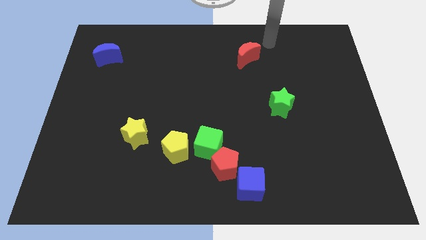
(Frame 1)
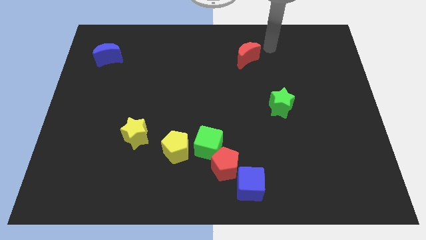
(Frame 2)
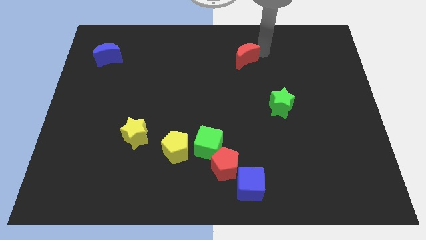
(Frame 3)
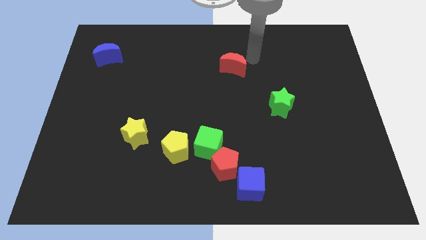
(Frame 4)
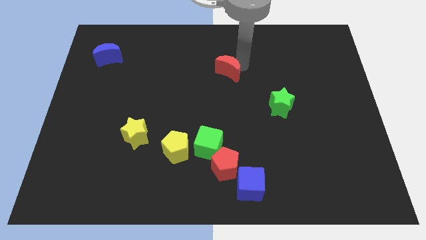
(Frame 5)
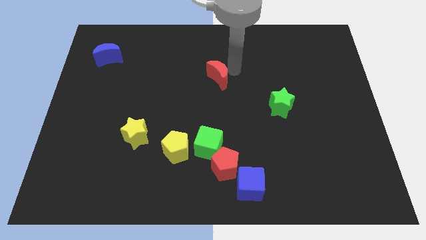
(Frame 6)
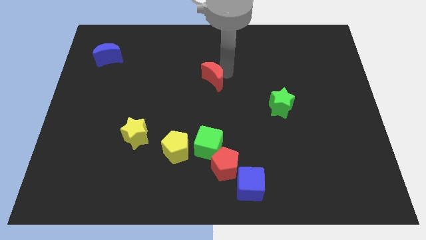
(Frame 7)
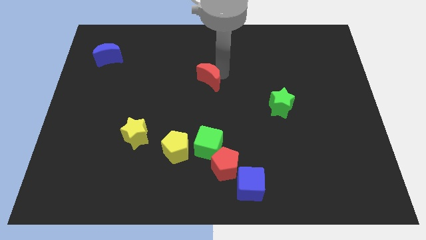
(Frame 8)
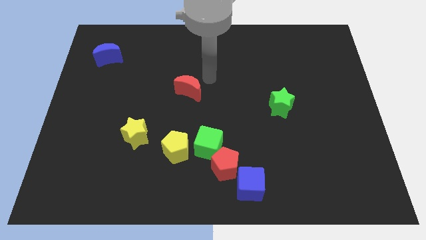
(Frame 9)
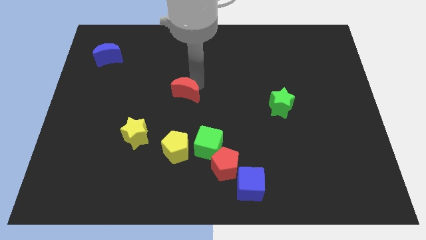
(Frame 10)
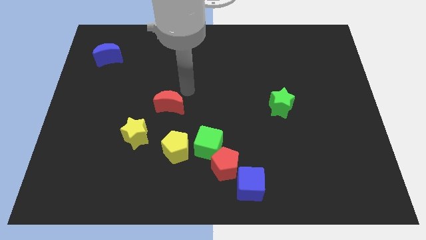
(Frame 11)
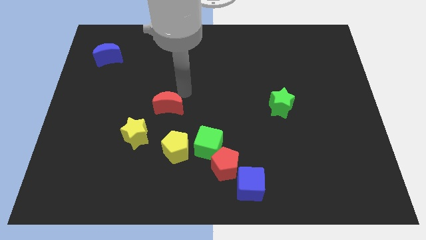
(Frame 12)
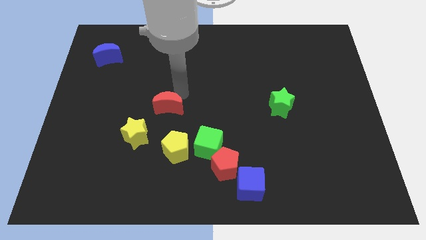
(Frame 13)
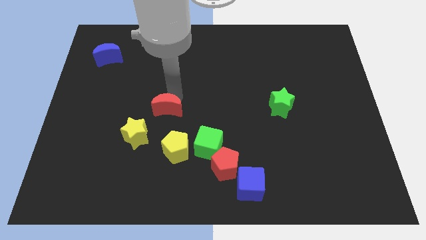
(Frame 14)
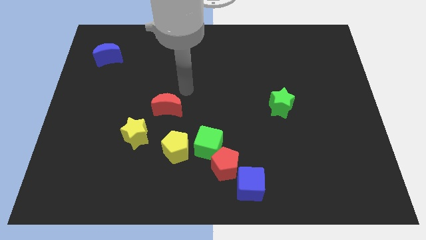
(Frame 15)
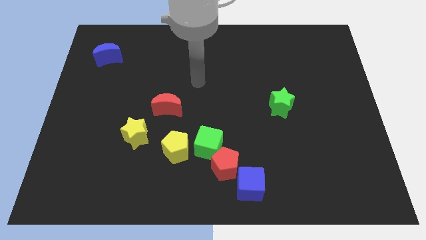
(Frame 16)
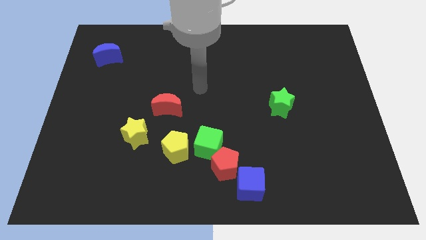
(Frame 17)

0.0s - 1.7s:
push the red crescent diagonal to the left of the green star

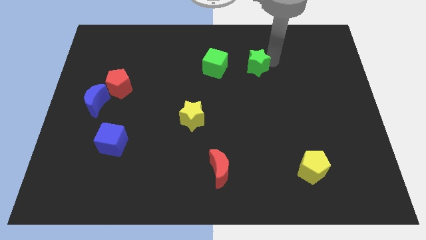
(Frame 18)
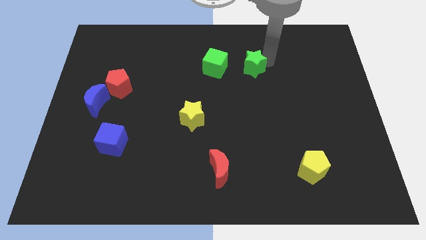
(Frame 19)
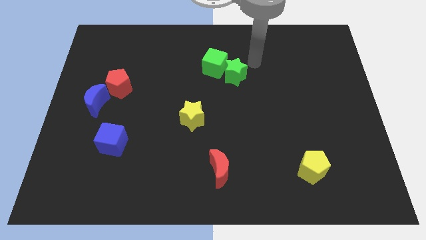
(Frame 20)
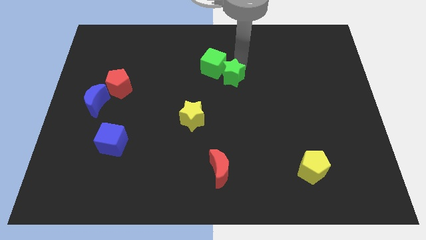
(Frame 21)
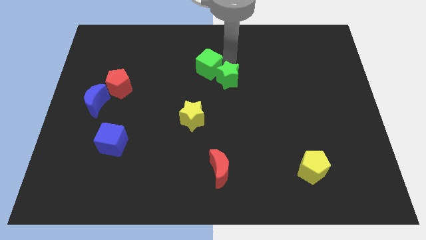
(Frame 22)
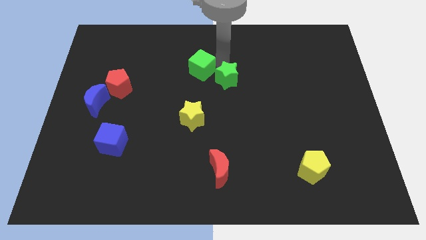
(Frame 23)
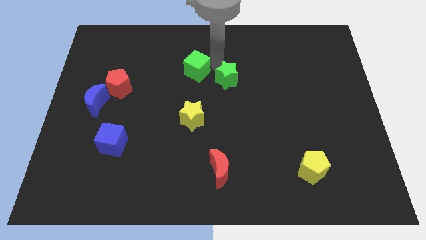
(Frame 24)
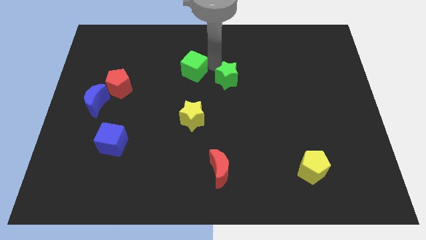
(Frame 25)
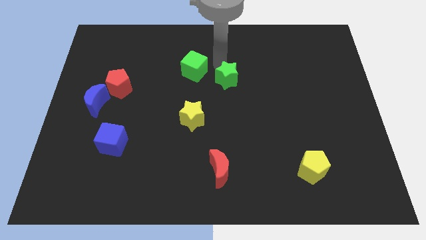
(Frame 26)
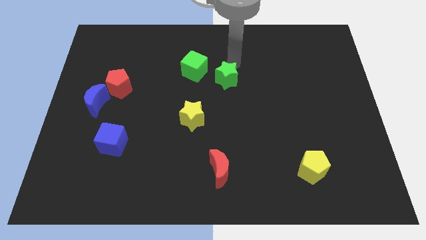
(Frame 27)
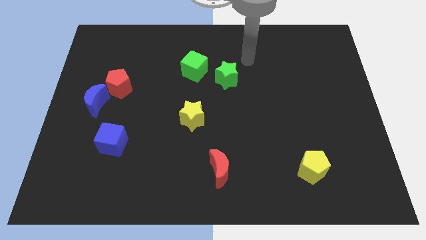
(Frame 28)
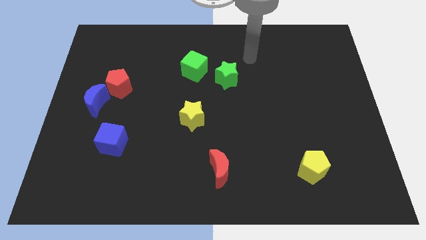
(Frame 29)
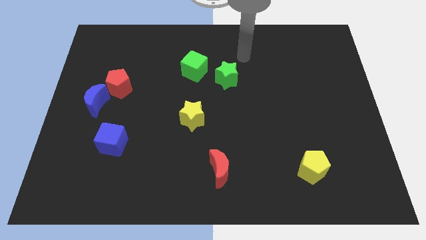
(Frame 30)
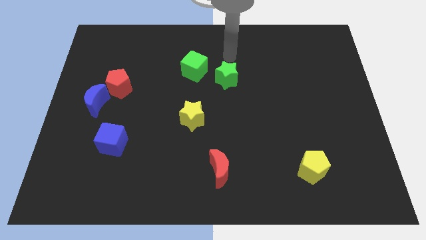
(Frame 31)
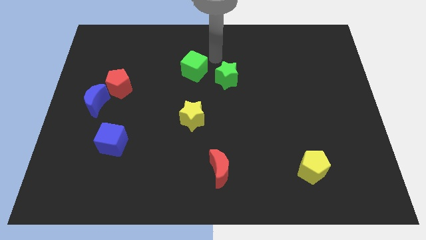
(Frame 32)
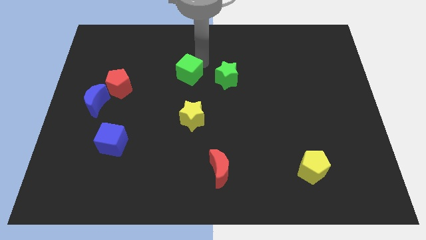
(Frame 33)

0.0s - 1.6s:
point your arm between green star and green cube

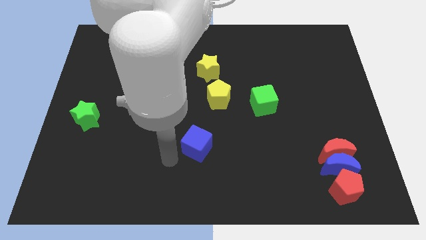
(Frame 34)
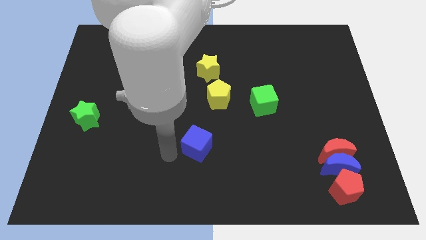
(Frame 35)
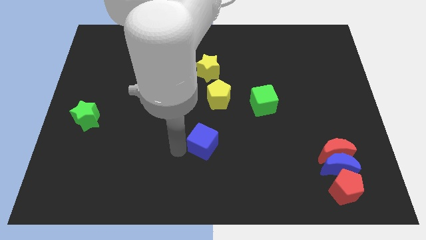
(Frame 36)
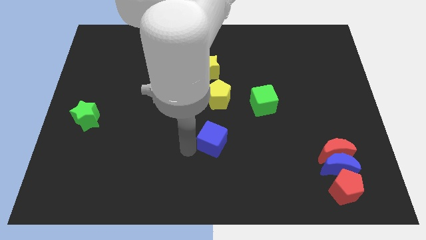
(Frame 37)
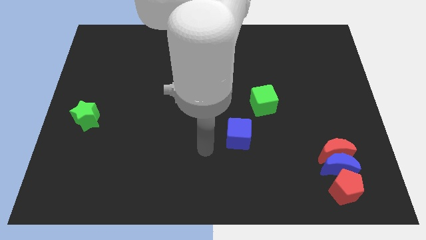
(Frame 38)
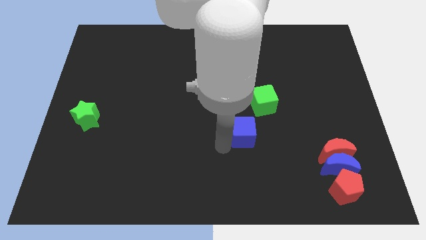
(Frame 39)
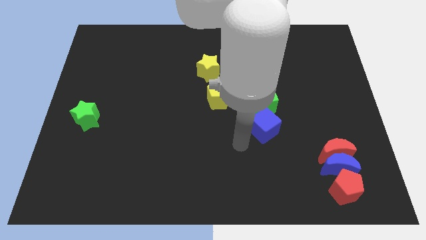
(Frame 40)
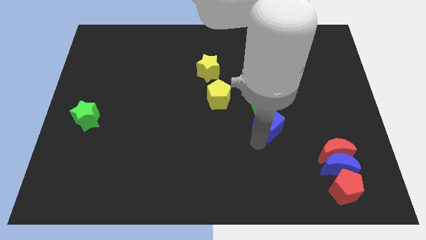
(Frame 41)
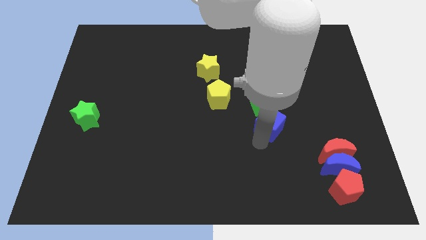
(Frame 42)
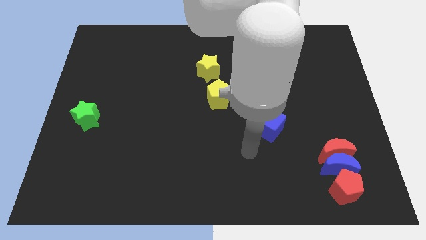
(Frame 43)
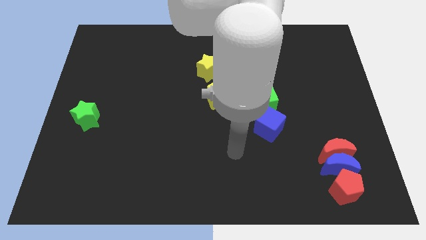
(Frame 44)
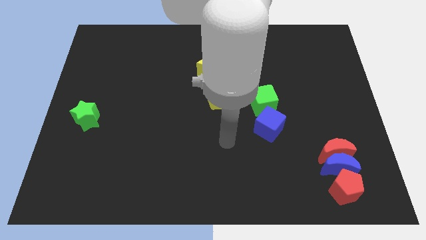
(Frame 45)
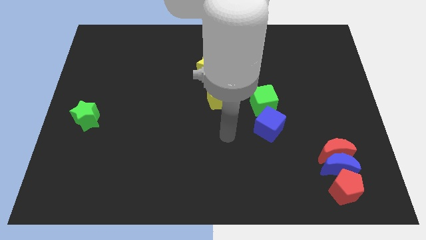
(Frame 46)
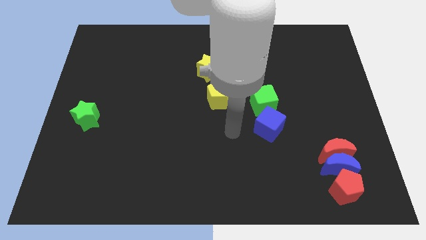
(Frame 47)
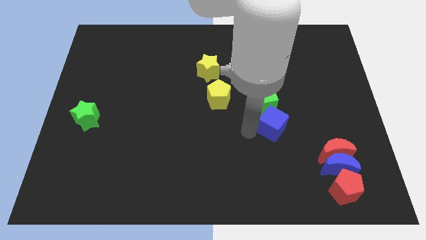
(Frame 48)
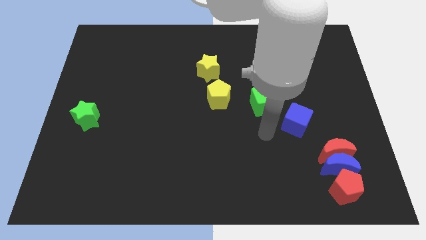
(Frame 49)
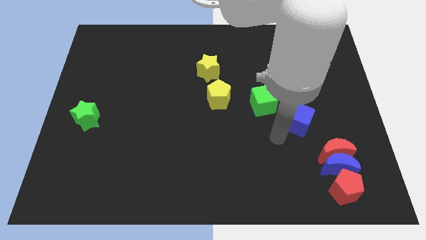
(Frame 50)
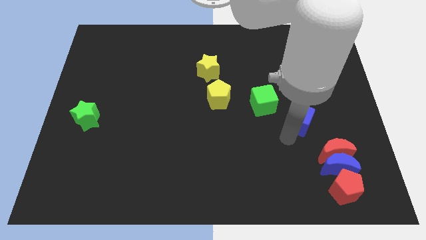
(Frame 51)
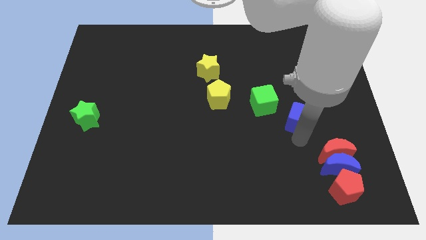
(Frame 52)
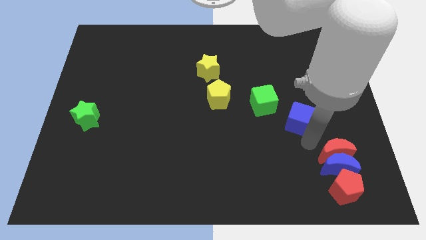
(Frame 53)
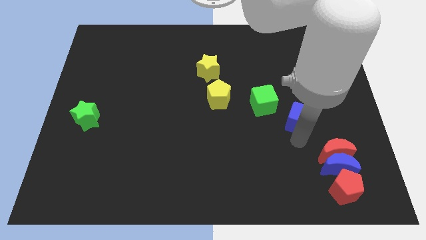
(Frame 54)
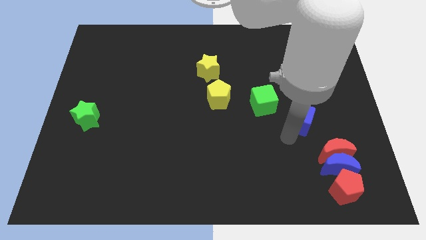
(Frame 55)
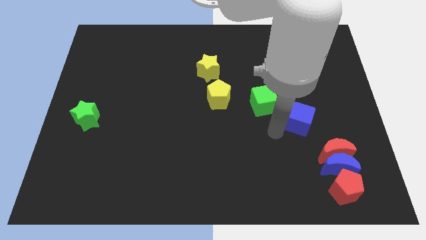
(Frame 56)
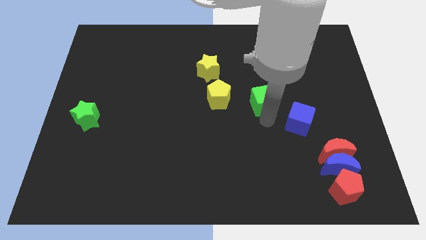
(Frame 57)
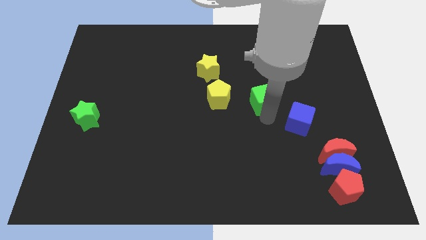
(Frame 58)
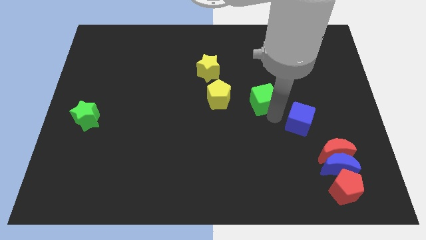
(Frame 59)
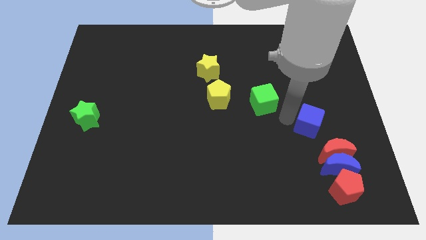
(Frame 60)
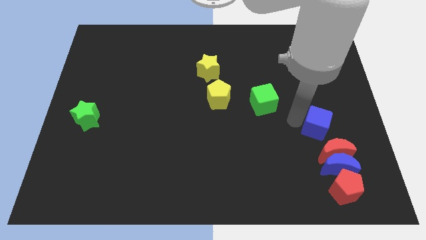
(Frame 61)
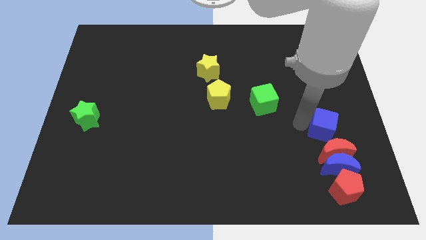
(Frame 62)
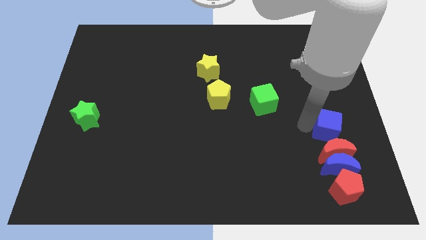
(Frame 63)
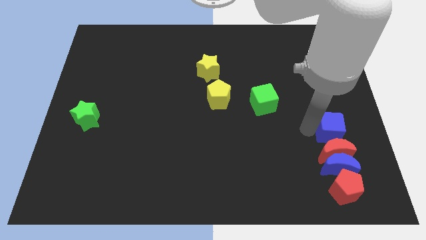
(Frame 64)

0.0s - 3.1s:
drag the blue cube and place it above the red moon

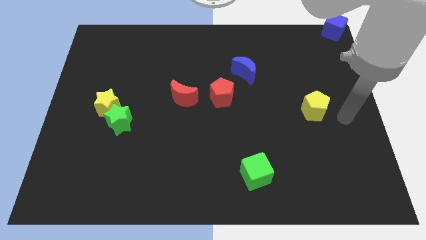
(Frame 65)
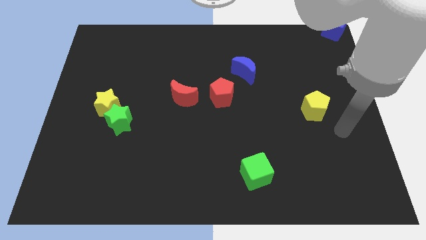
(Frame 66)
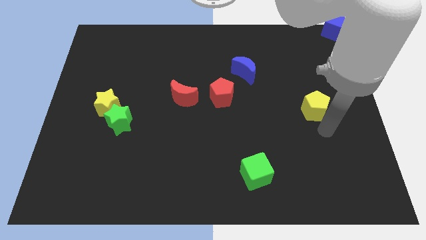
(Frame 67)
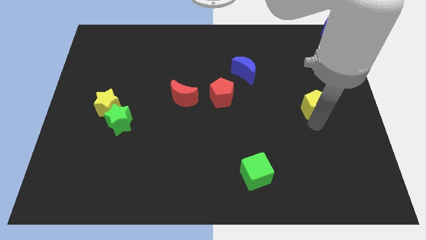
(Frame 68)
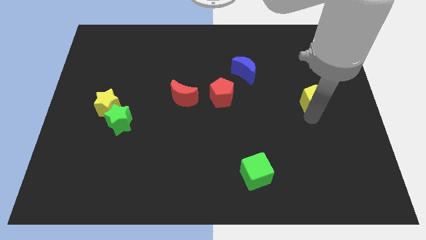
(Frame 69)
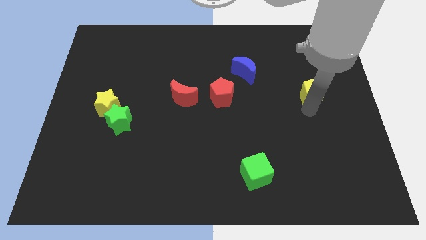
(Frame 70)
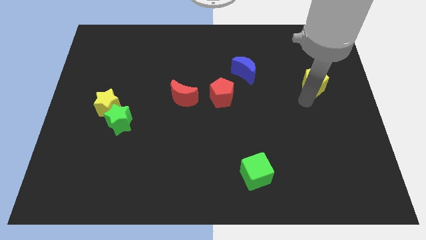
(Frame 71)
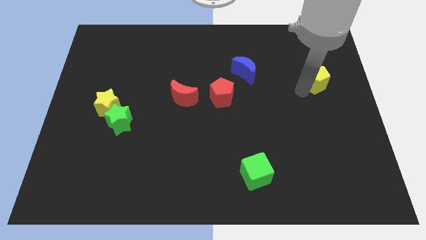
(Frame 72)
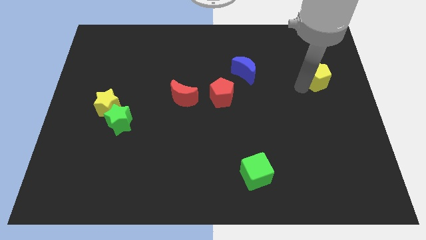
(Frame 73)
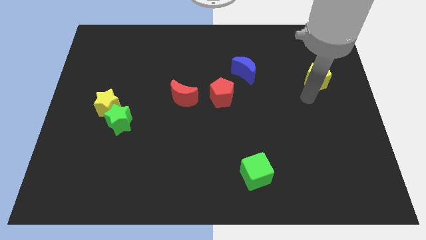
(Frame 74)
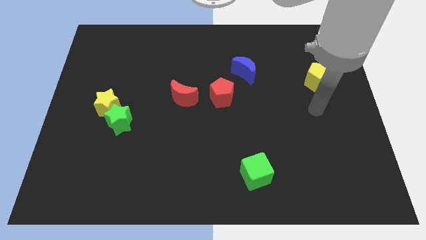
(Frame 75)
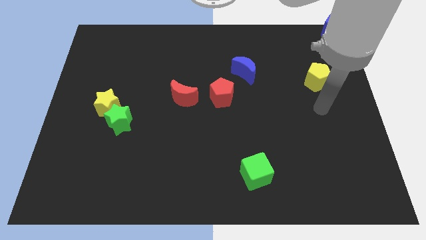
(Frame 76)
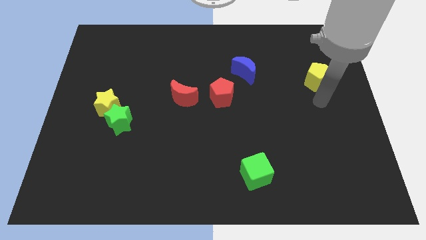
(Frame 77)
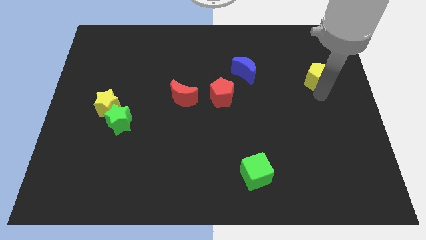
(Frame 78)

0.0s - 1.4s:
place the yellow pentagon right to the blue moon

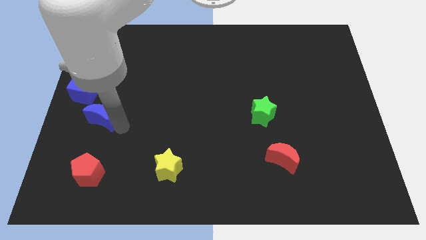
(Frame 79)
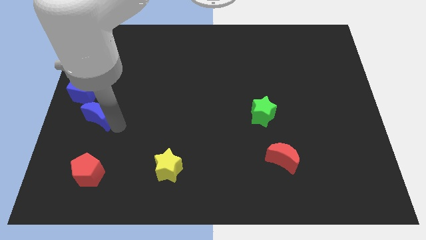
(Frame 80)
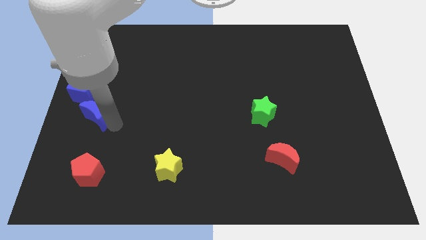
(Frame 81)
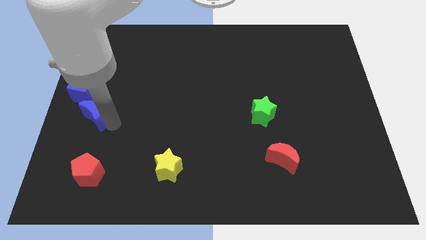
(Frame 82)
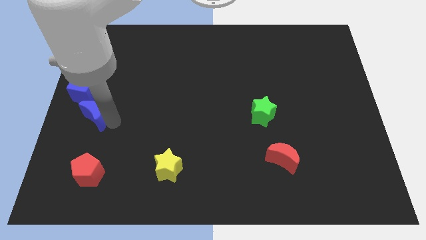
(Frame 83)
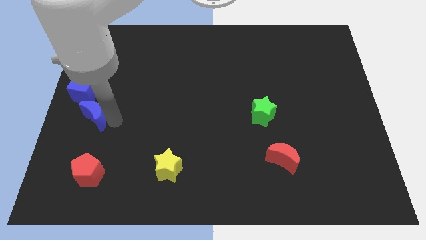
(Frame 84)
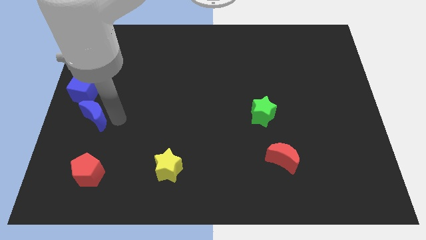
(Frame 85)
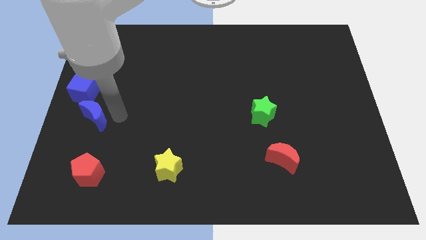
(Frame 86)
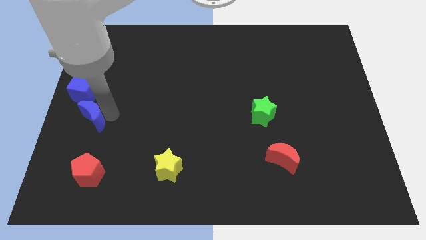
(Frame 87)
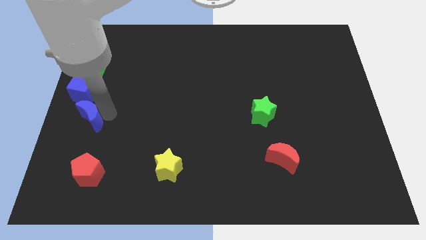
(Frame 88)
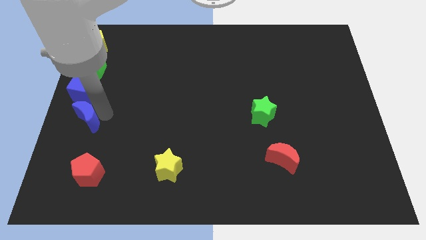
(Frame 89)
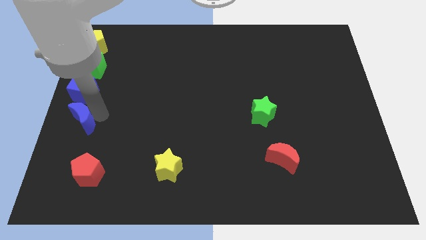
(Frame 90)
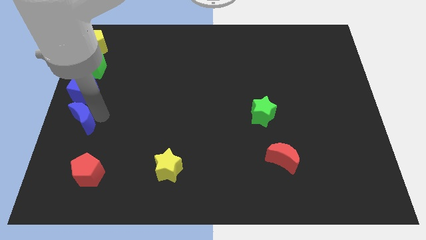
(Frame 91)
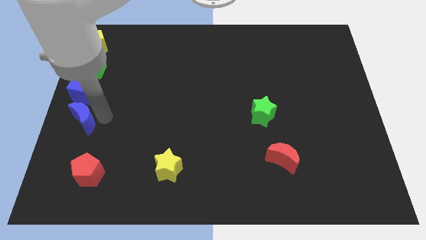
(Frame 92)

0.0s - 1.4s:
push the blue crescent towards the center left
